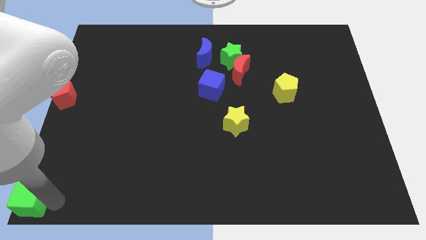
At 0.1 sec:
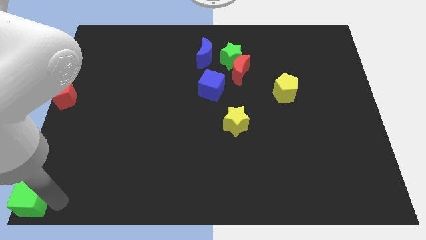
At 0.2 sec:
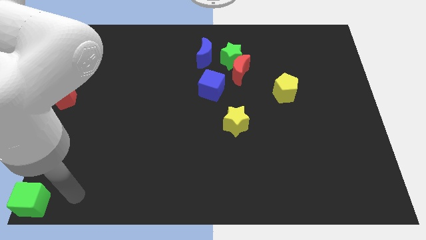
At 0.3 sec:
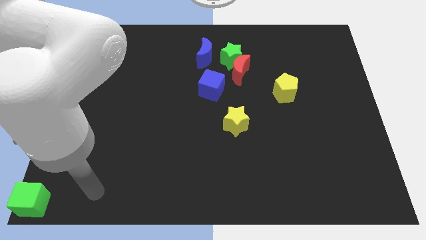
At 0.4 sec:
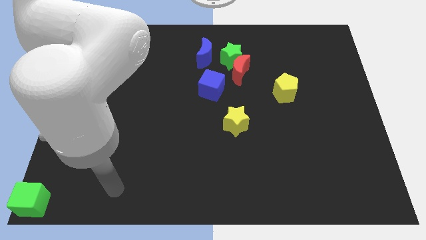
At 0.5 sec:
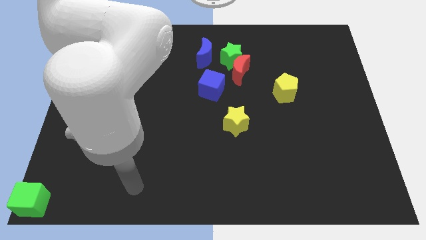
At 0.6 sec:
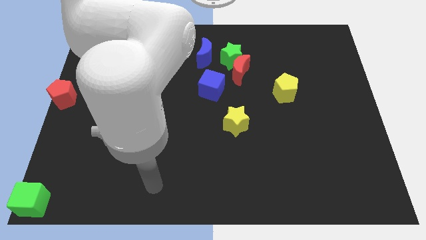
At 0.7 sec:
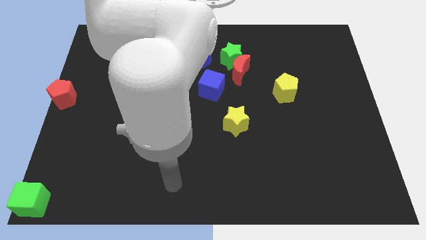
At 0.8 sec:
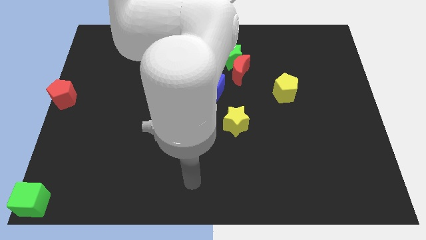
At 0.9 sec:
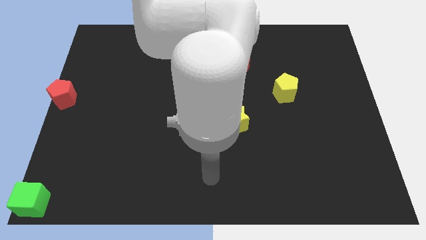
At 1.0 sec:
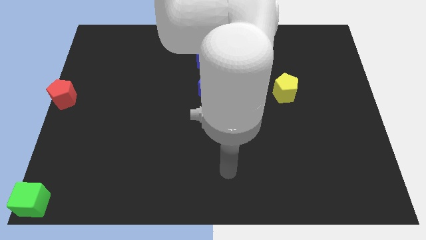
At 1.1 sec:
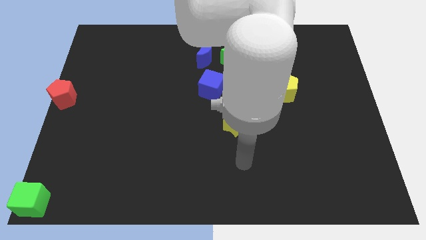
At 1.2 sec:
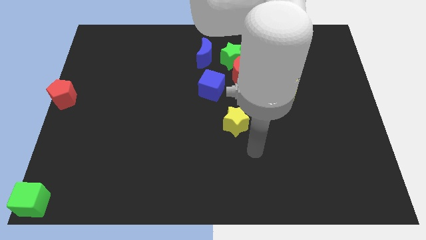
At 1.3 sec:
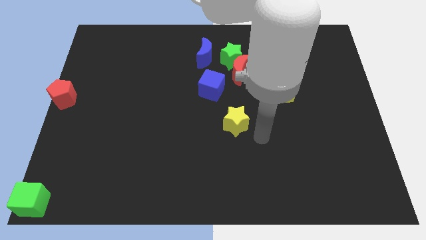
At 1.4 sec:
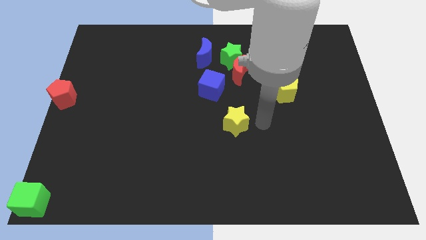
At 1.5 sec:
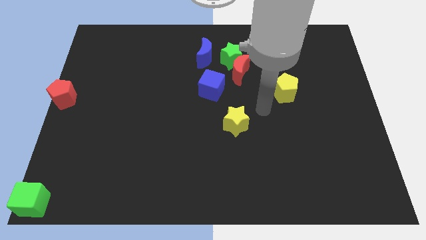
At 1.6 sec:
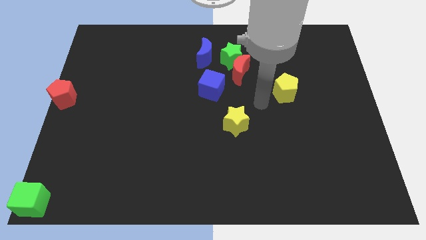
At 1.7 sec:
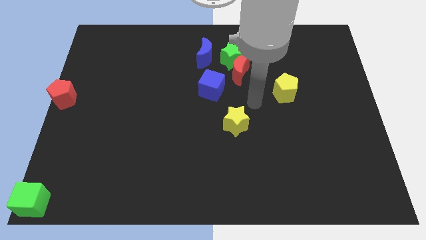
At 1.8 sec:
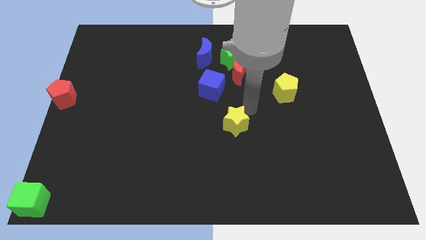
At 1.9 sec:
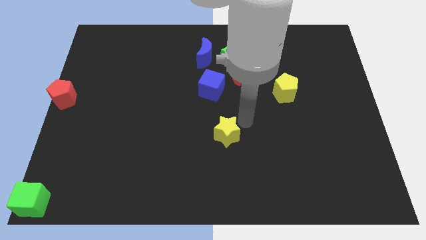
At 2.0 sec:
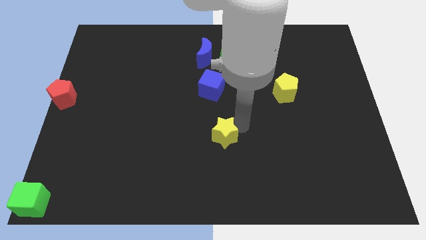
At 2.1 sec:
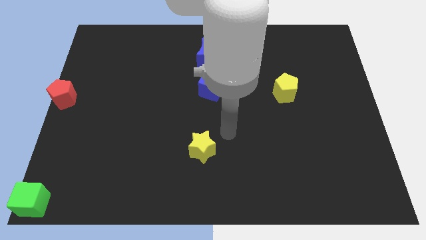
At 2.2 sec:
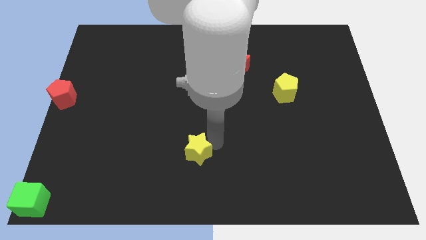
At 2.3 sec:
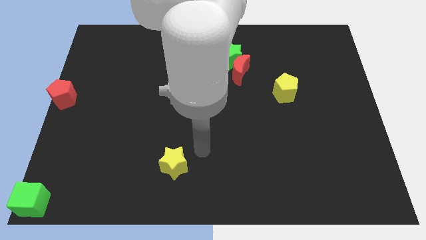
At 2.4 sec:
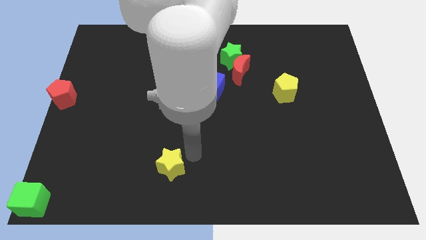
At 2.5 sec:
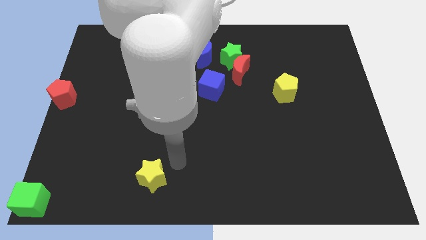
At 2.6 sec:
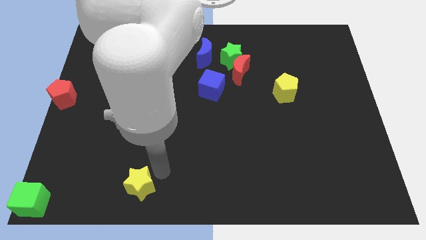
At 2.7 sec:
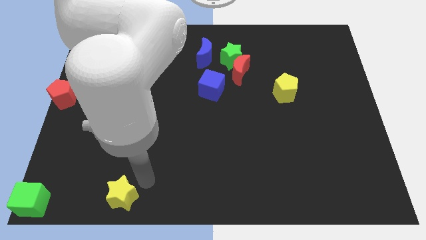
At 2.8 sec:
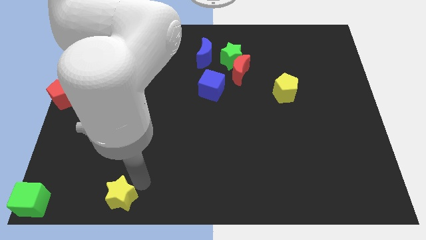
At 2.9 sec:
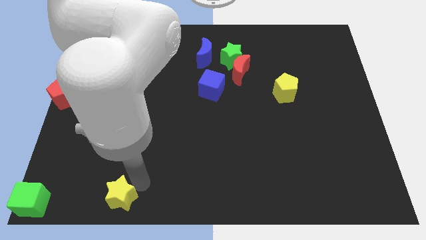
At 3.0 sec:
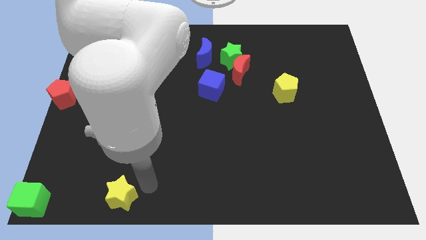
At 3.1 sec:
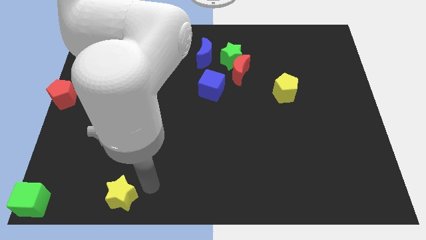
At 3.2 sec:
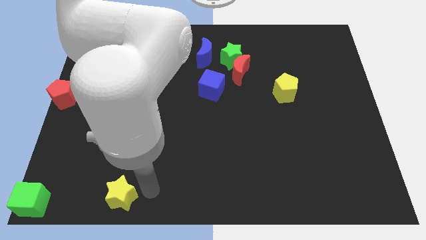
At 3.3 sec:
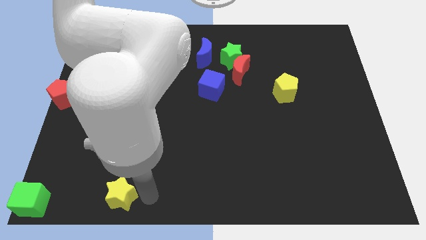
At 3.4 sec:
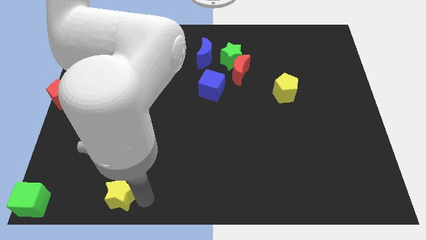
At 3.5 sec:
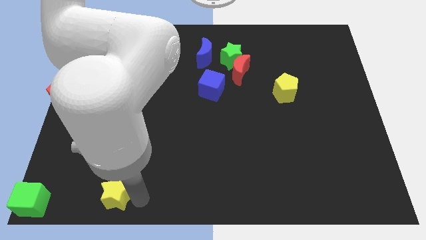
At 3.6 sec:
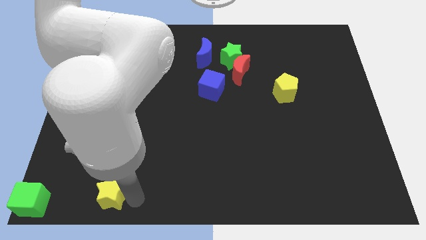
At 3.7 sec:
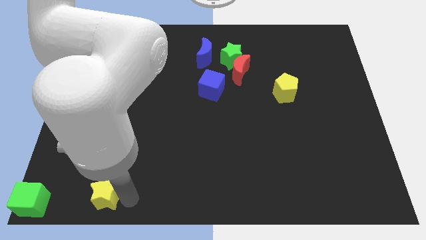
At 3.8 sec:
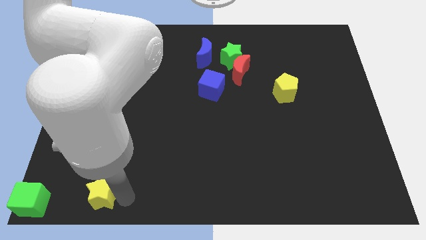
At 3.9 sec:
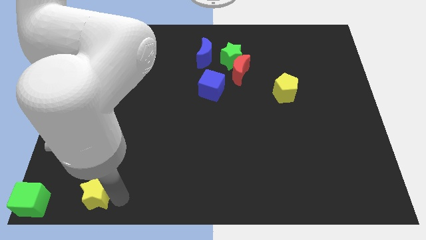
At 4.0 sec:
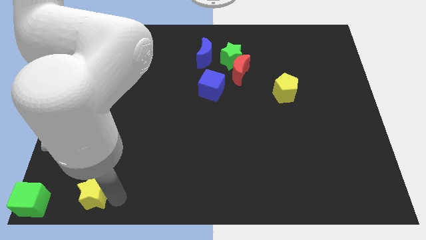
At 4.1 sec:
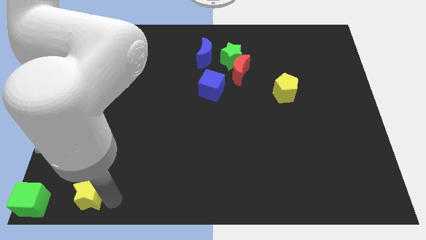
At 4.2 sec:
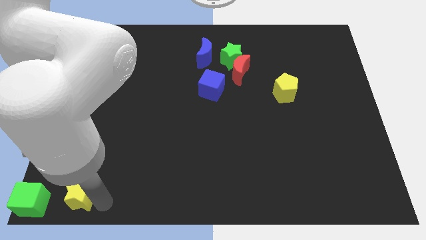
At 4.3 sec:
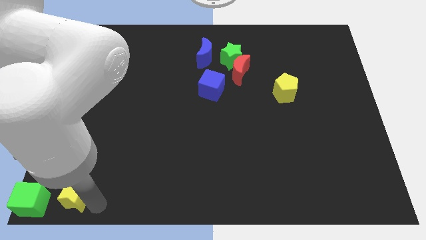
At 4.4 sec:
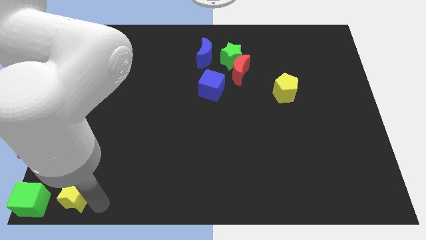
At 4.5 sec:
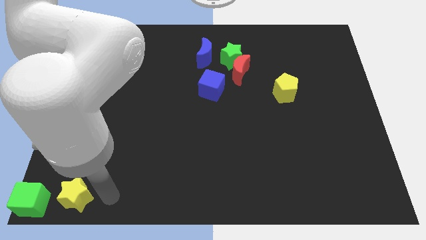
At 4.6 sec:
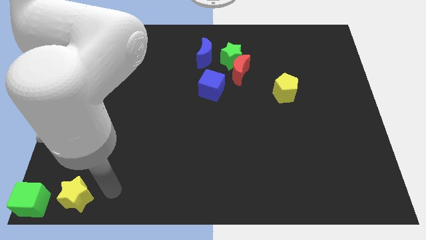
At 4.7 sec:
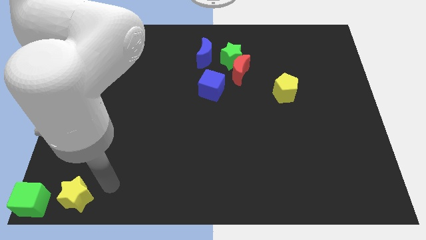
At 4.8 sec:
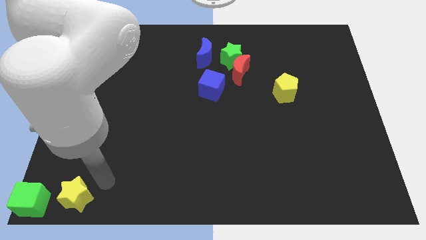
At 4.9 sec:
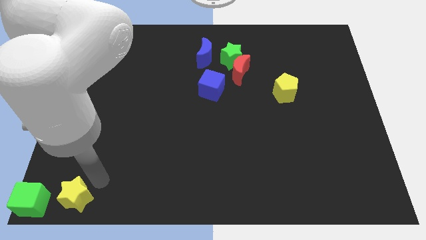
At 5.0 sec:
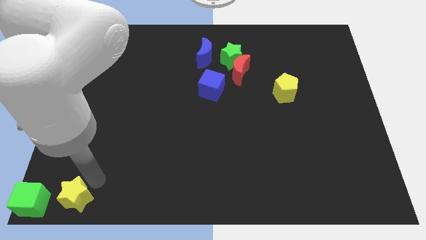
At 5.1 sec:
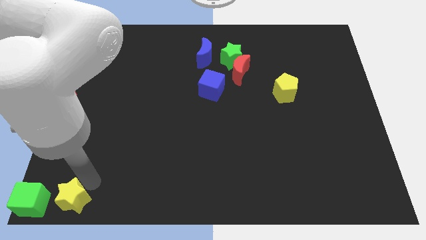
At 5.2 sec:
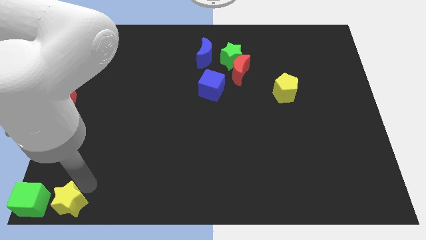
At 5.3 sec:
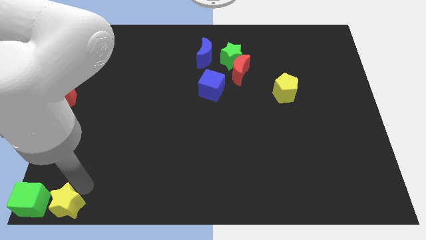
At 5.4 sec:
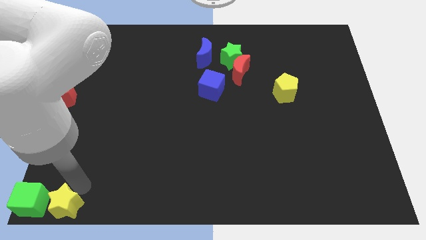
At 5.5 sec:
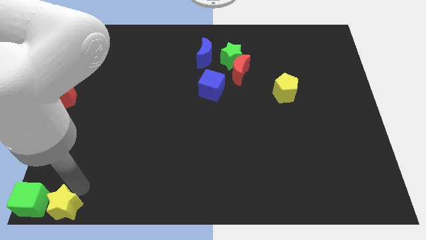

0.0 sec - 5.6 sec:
place the yellow star to the right side of green cube

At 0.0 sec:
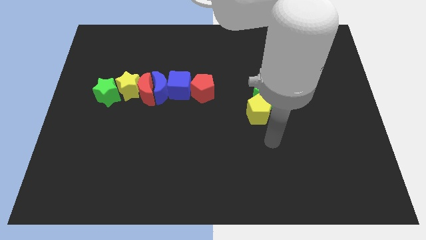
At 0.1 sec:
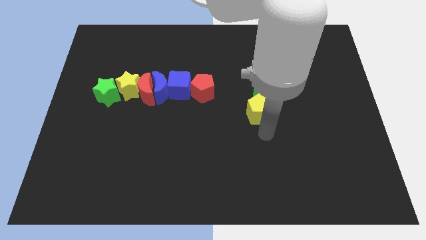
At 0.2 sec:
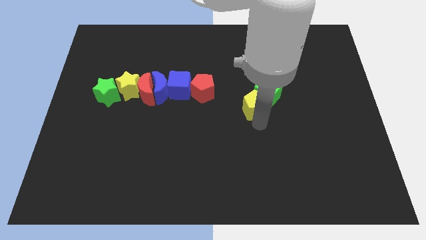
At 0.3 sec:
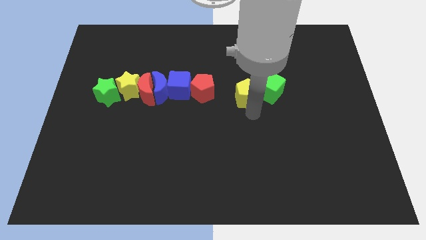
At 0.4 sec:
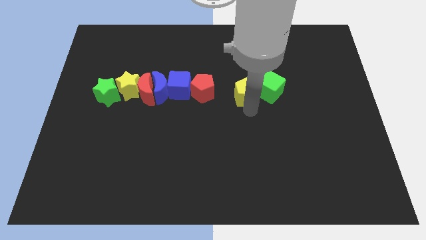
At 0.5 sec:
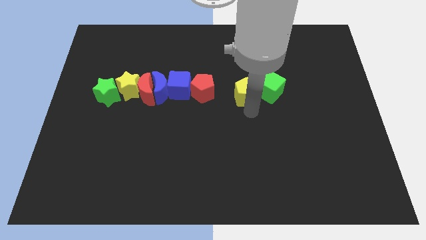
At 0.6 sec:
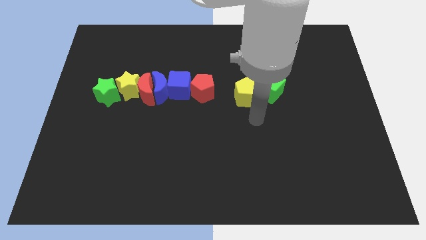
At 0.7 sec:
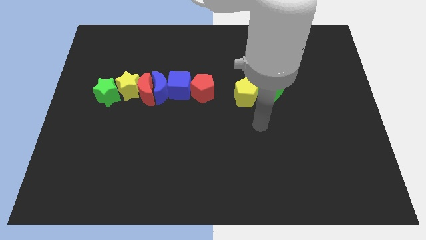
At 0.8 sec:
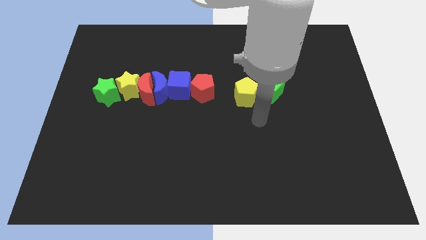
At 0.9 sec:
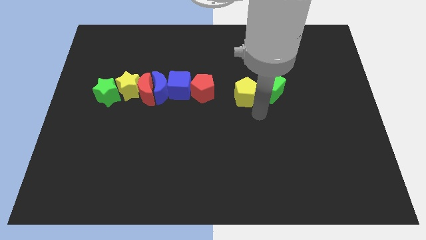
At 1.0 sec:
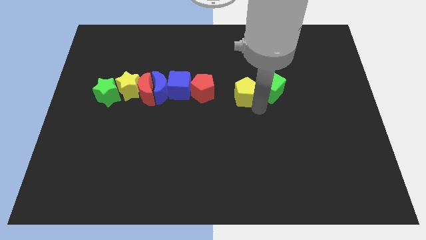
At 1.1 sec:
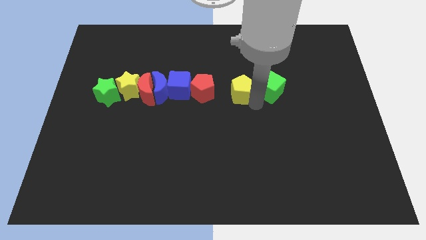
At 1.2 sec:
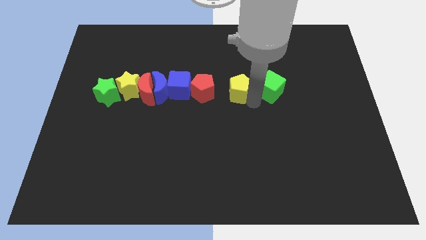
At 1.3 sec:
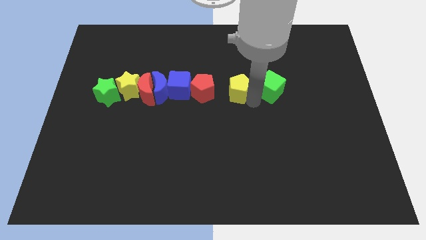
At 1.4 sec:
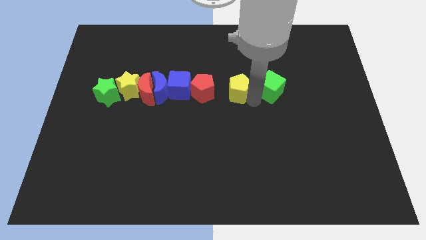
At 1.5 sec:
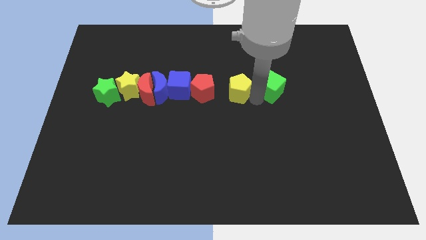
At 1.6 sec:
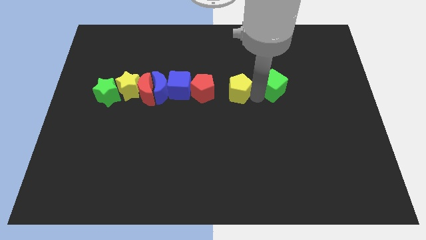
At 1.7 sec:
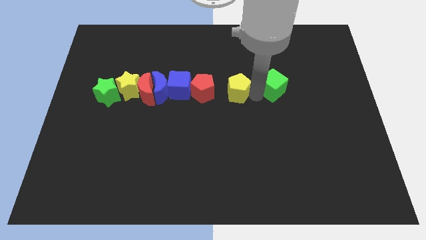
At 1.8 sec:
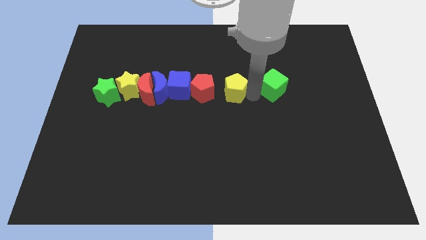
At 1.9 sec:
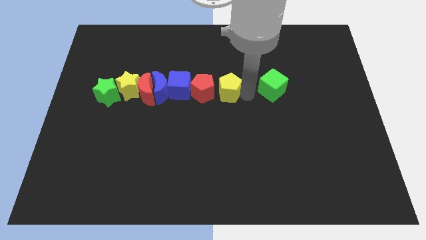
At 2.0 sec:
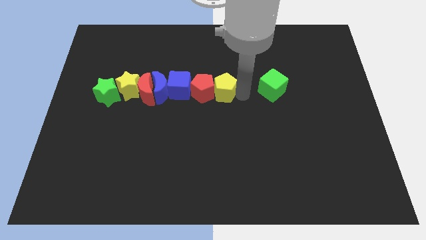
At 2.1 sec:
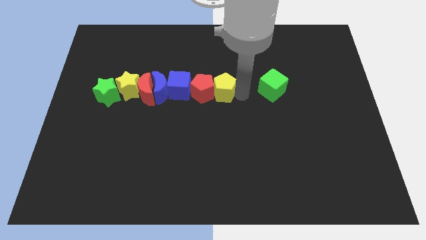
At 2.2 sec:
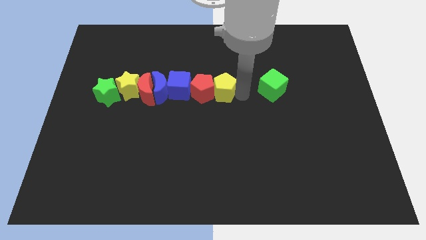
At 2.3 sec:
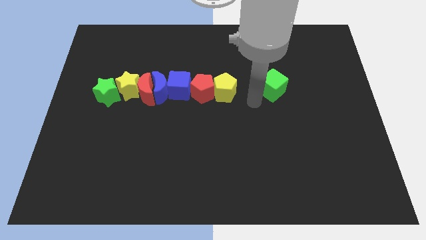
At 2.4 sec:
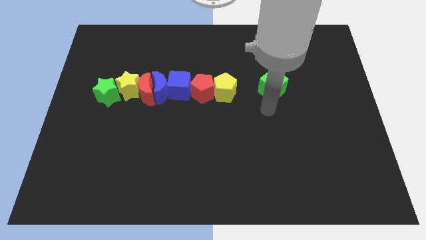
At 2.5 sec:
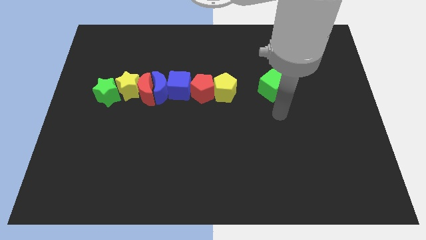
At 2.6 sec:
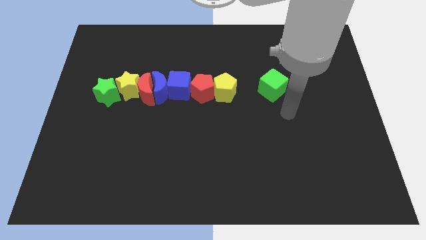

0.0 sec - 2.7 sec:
push yellow pentagon into red pentagon

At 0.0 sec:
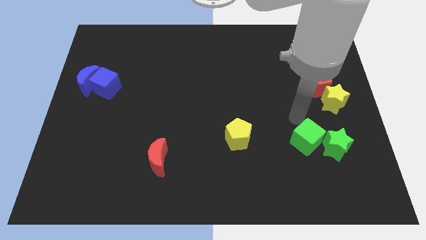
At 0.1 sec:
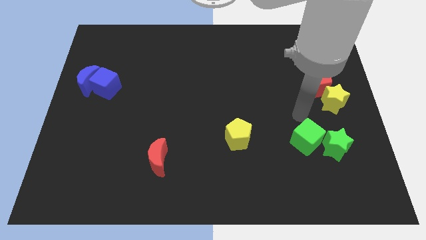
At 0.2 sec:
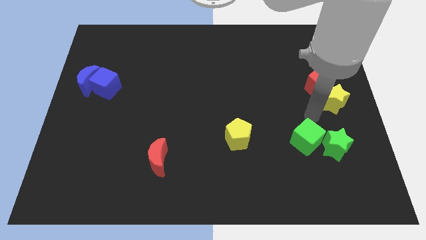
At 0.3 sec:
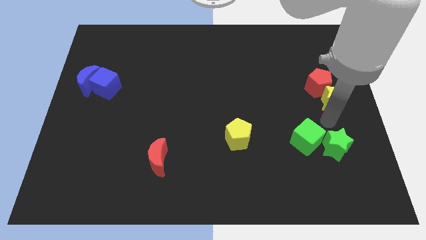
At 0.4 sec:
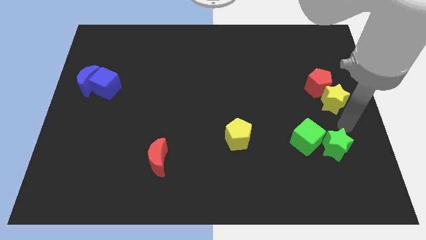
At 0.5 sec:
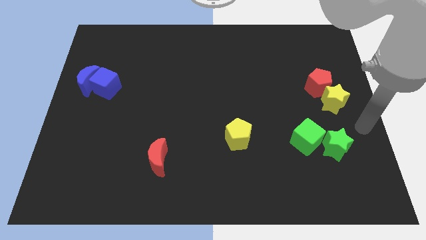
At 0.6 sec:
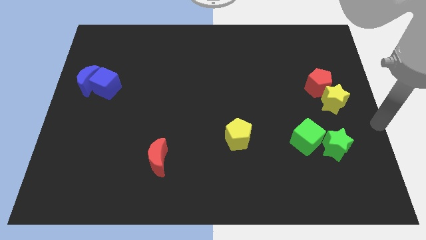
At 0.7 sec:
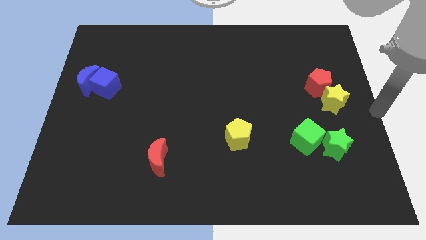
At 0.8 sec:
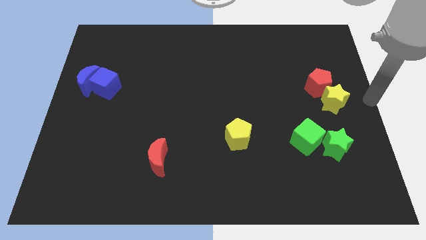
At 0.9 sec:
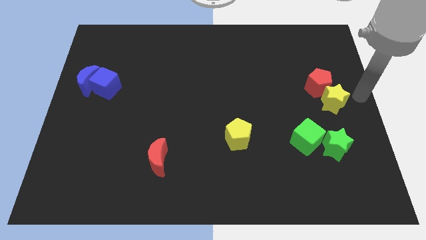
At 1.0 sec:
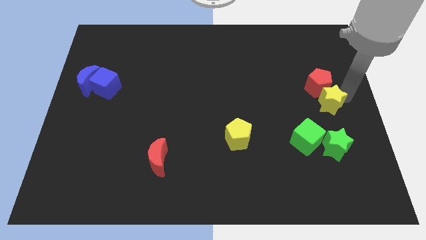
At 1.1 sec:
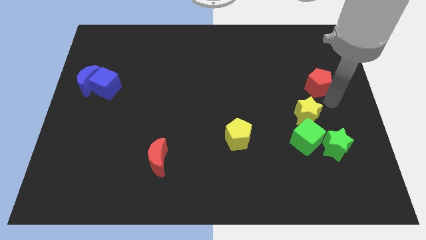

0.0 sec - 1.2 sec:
place the yellow star at the top of green cube
